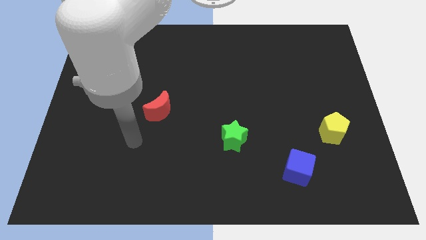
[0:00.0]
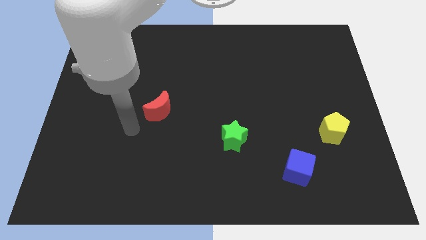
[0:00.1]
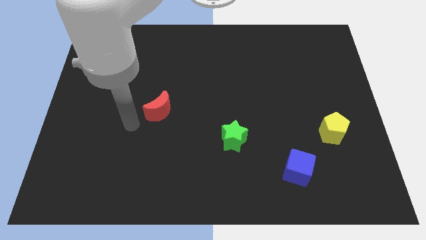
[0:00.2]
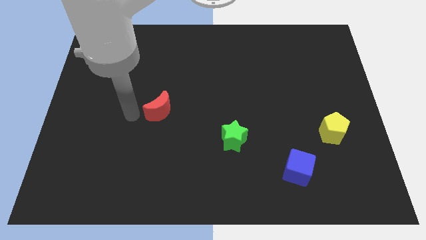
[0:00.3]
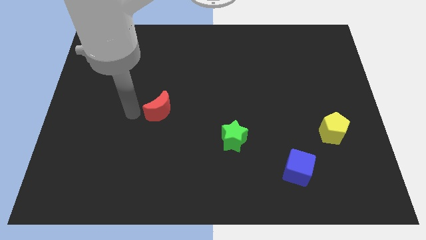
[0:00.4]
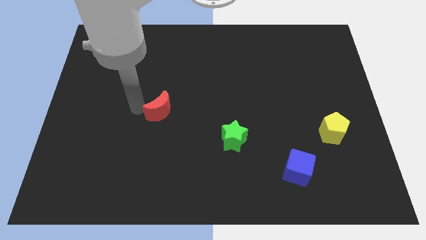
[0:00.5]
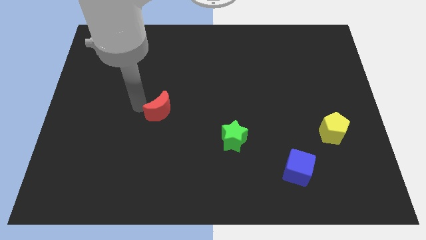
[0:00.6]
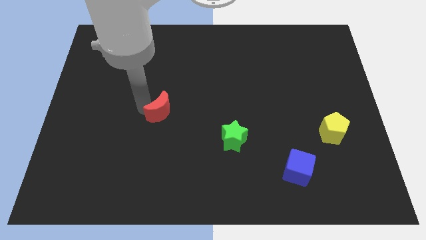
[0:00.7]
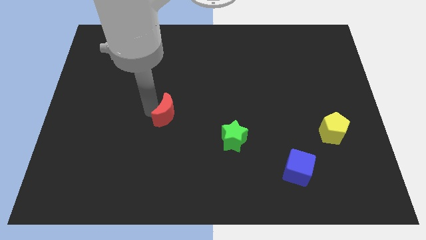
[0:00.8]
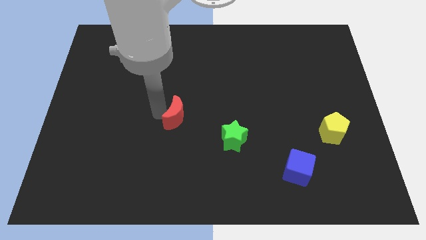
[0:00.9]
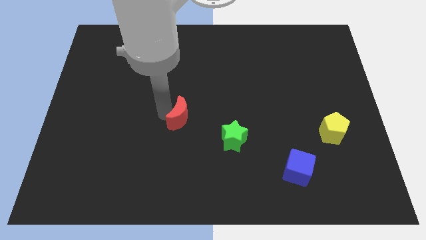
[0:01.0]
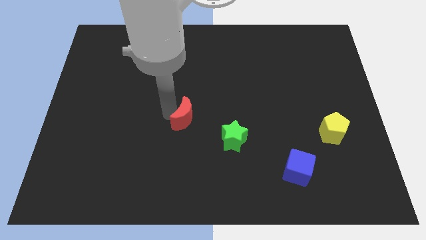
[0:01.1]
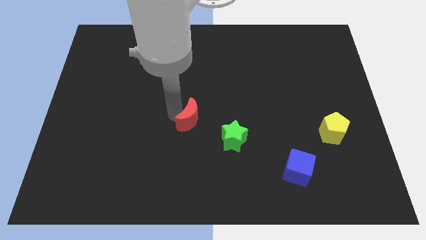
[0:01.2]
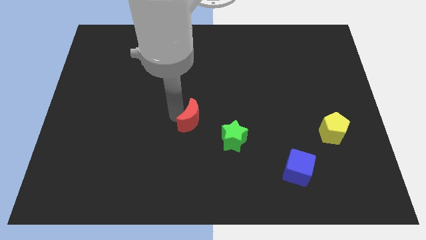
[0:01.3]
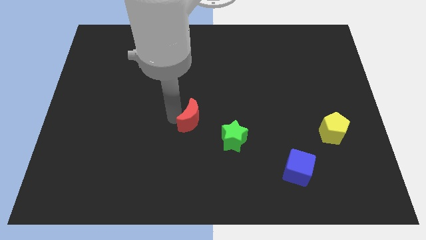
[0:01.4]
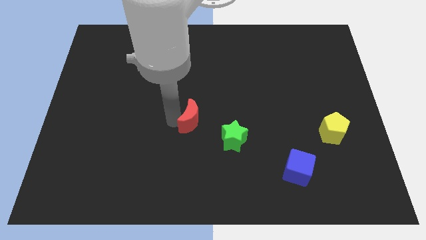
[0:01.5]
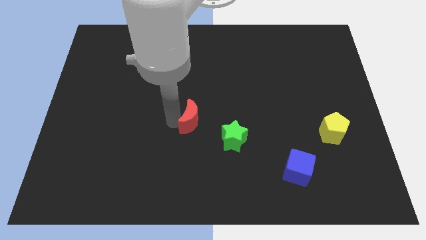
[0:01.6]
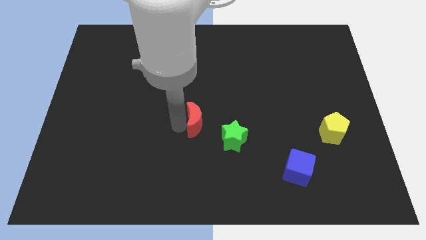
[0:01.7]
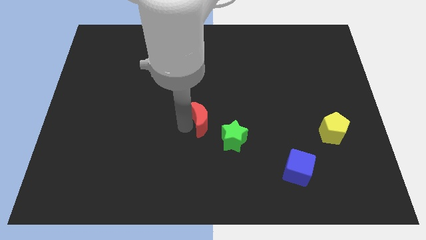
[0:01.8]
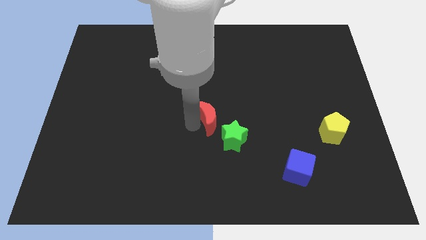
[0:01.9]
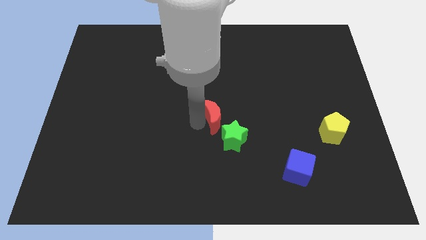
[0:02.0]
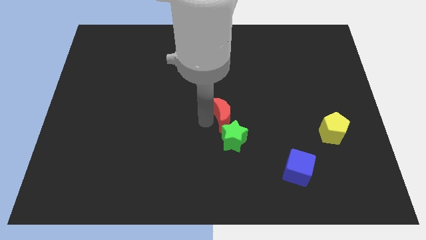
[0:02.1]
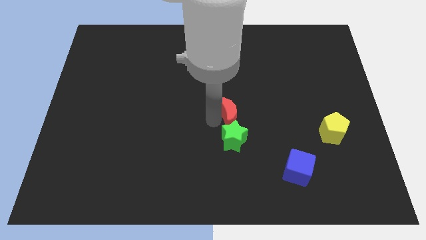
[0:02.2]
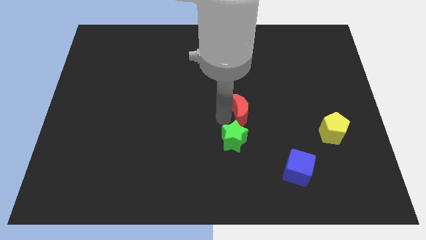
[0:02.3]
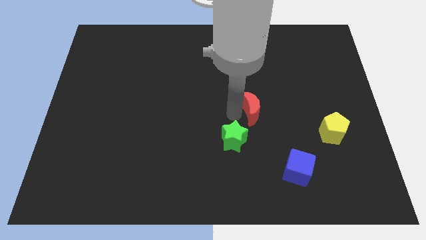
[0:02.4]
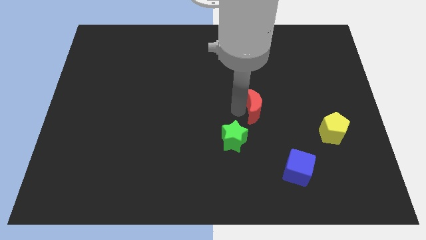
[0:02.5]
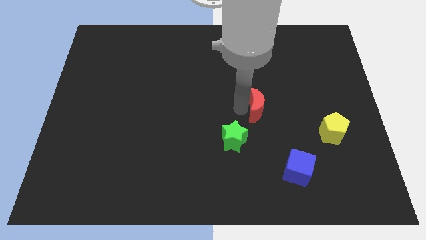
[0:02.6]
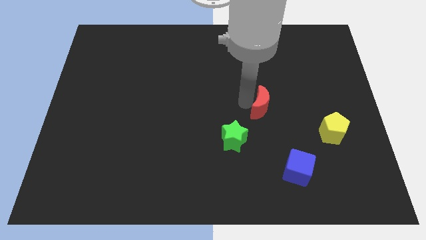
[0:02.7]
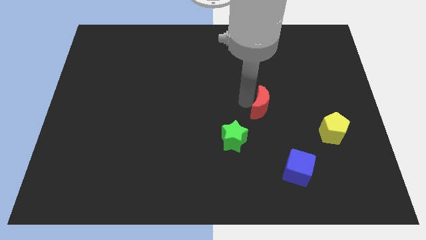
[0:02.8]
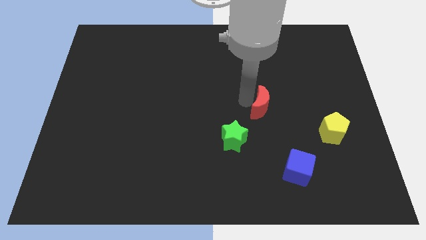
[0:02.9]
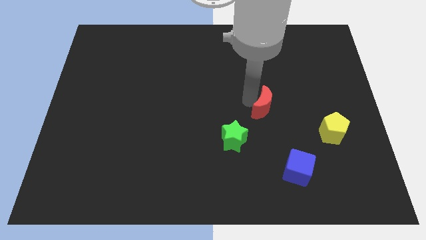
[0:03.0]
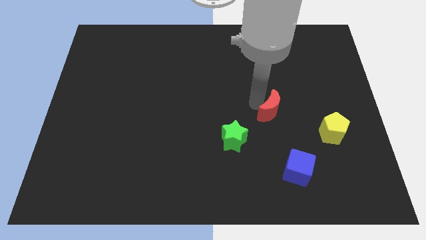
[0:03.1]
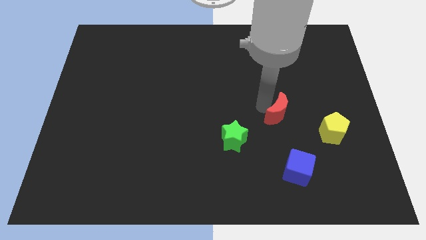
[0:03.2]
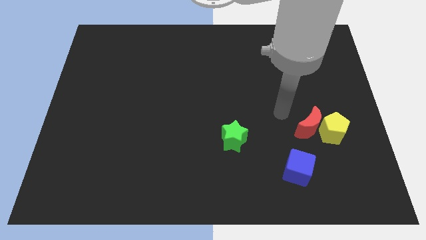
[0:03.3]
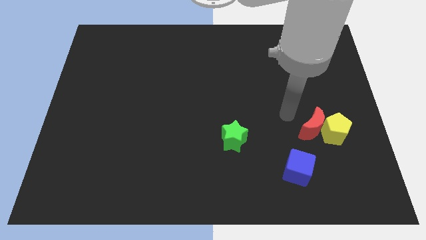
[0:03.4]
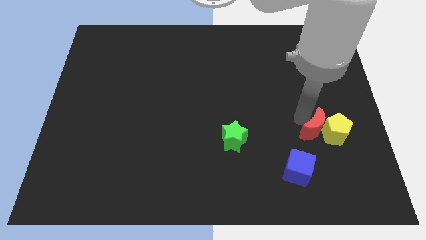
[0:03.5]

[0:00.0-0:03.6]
slide the red block next to the yellow block

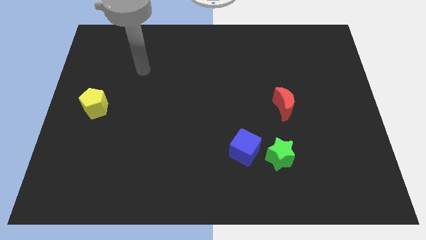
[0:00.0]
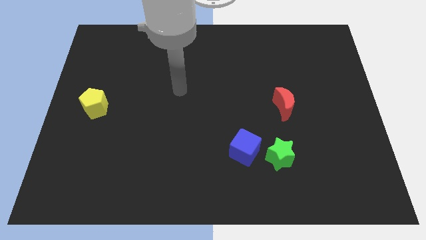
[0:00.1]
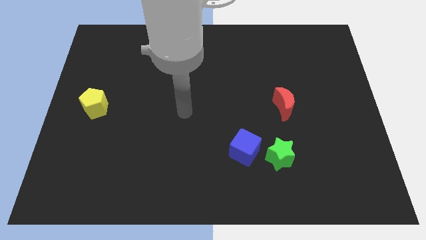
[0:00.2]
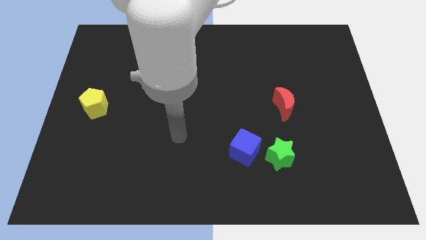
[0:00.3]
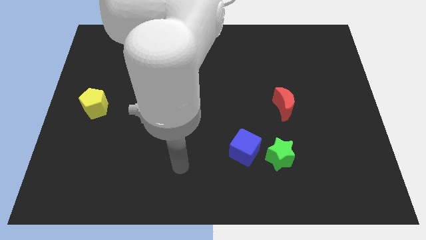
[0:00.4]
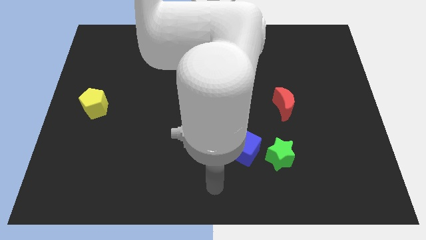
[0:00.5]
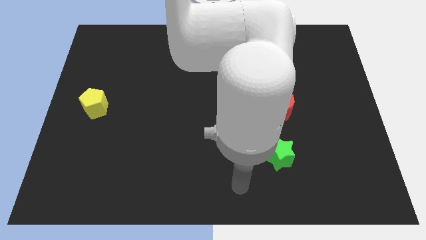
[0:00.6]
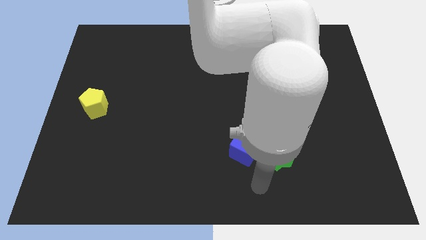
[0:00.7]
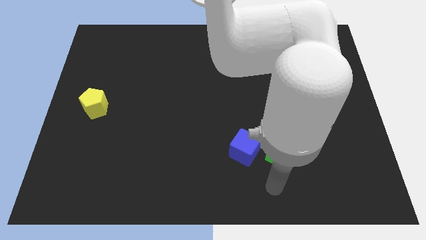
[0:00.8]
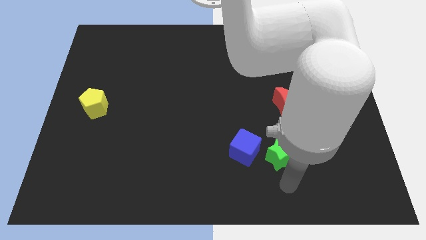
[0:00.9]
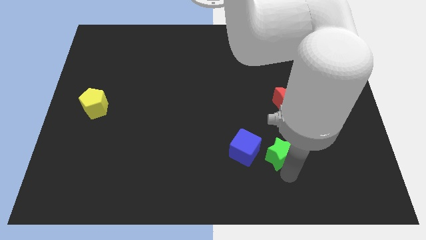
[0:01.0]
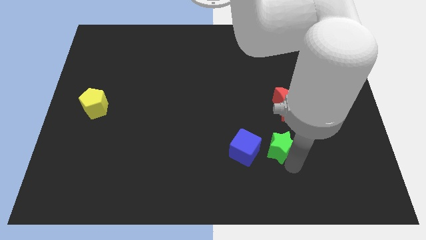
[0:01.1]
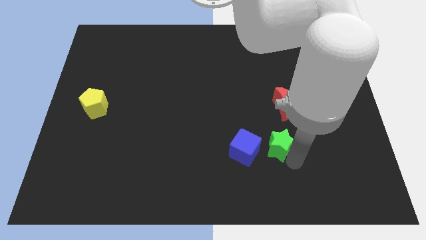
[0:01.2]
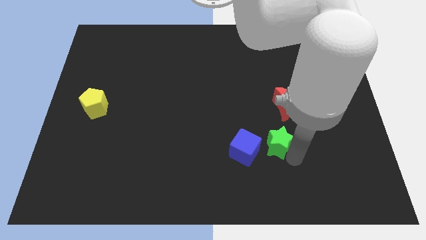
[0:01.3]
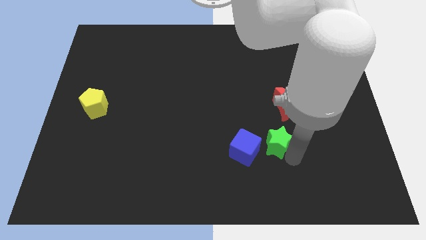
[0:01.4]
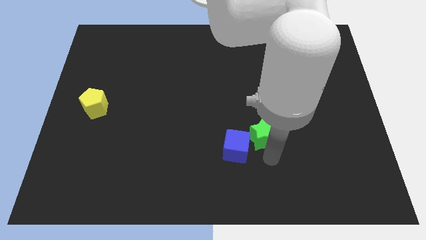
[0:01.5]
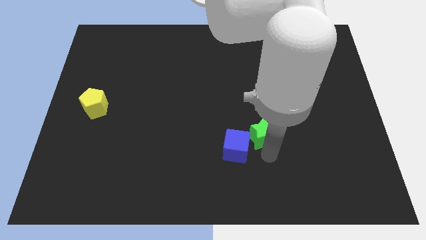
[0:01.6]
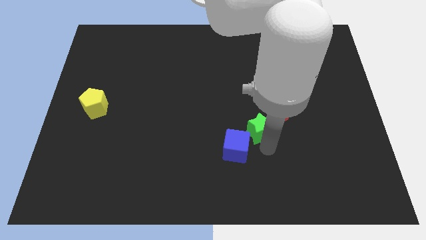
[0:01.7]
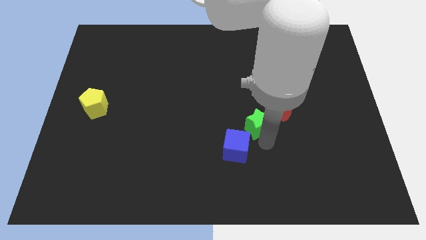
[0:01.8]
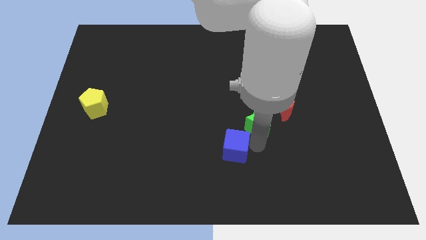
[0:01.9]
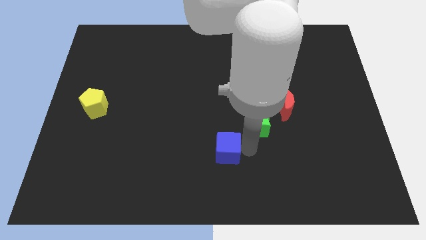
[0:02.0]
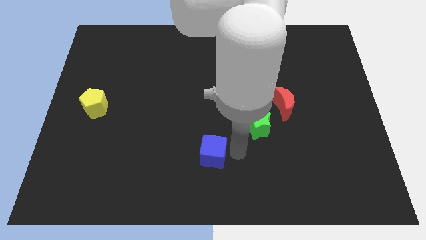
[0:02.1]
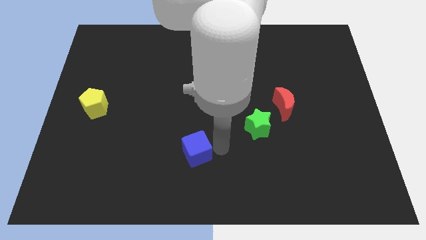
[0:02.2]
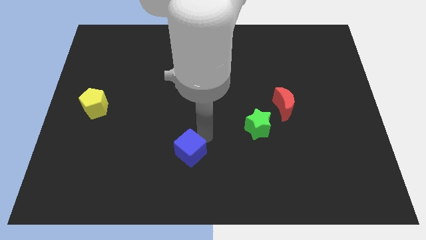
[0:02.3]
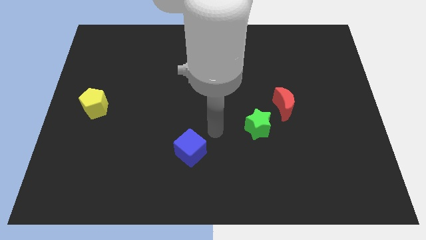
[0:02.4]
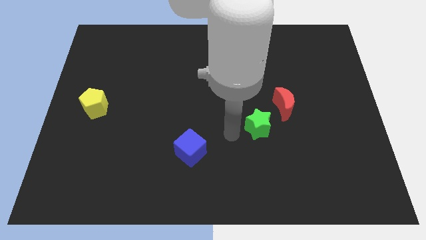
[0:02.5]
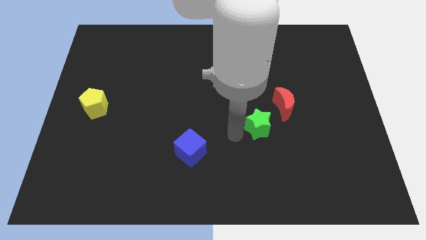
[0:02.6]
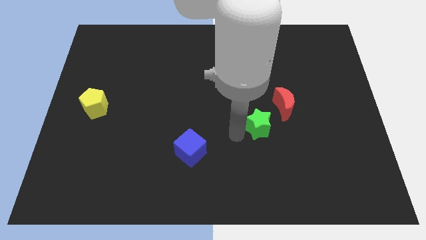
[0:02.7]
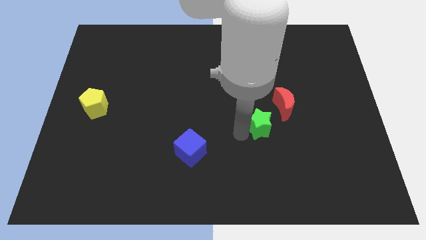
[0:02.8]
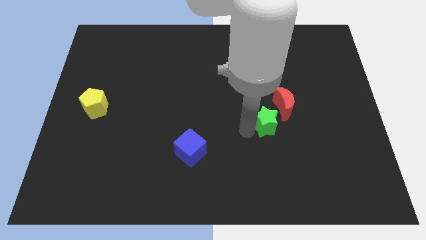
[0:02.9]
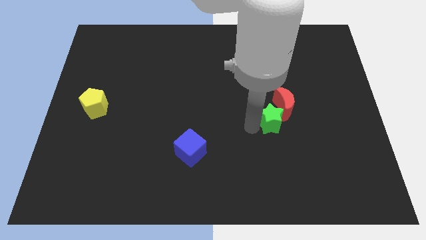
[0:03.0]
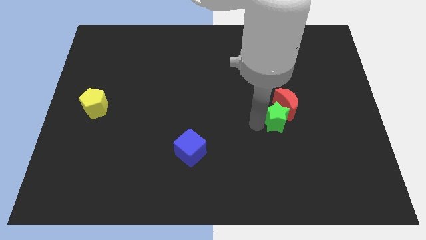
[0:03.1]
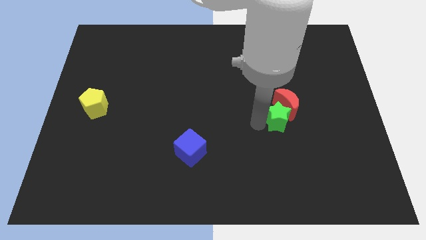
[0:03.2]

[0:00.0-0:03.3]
put the star next to the red block

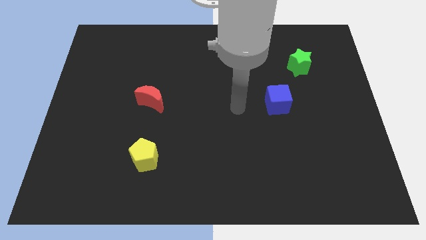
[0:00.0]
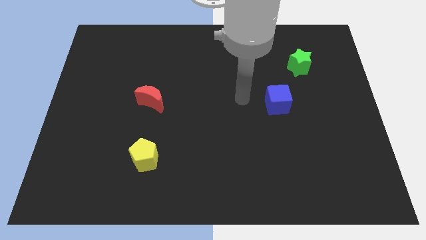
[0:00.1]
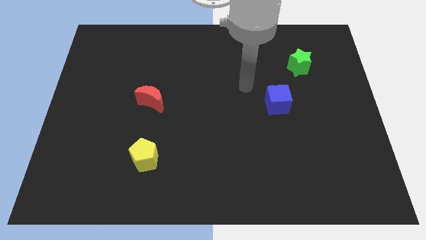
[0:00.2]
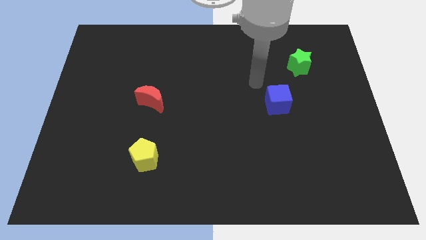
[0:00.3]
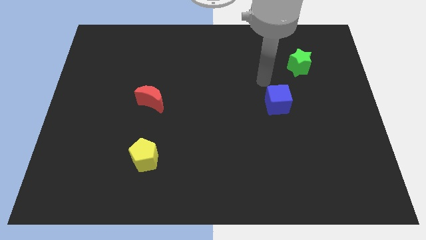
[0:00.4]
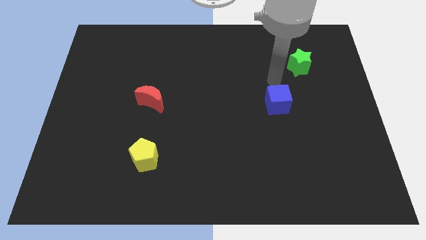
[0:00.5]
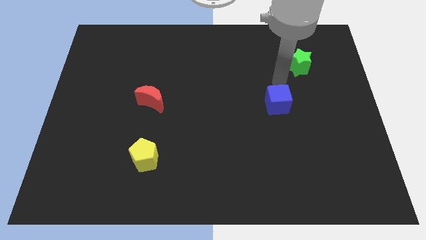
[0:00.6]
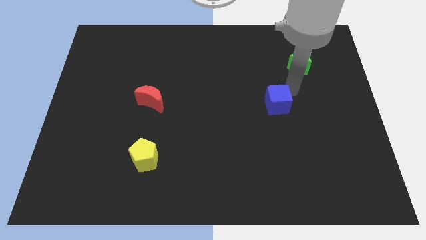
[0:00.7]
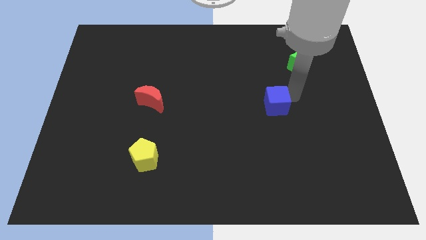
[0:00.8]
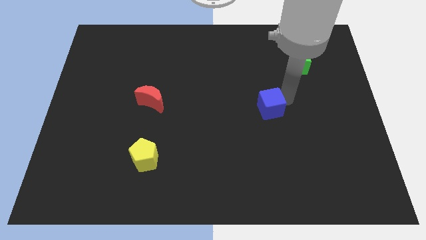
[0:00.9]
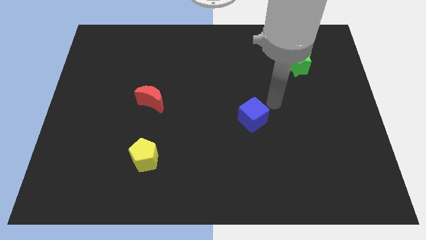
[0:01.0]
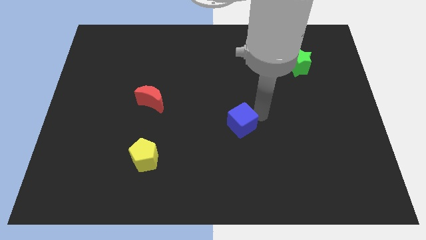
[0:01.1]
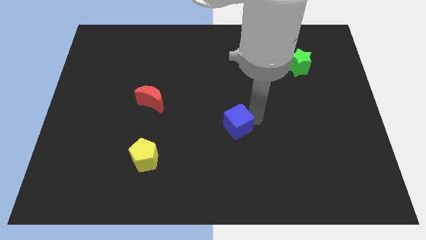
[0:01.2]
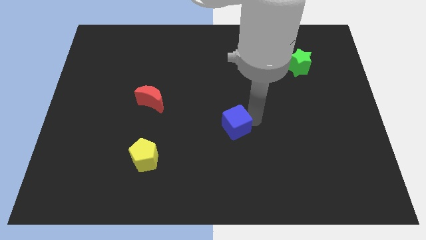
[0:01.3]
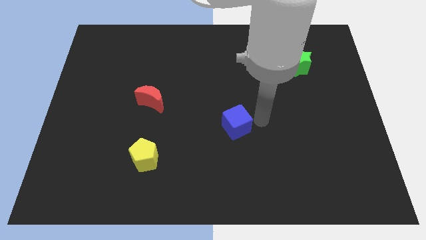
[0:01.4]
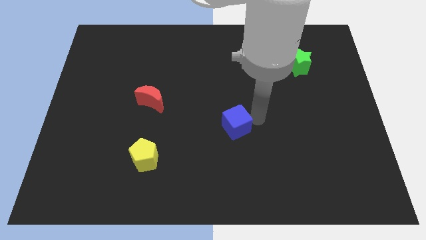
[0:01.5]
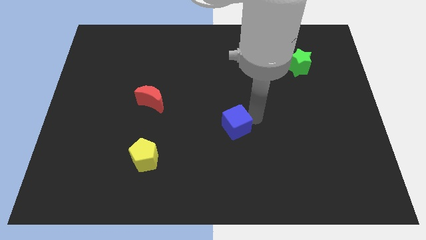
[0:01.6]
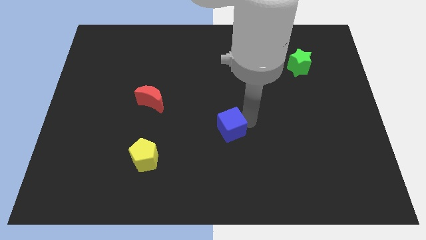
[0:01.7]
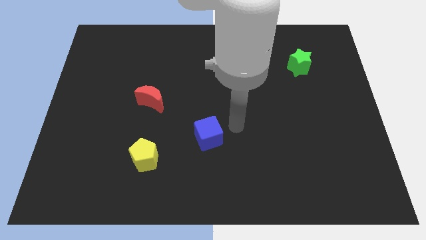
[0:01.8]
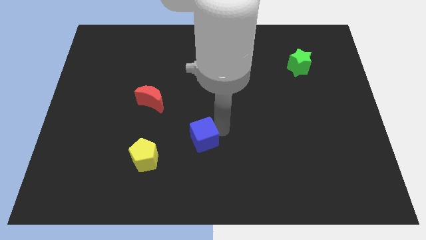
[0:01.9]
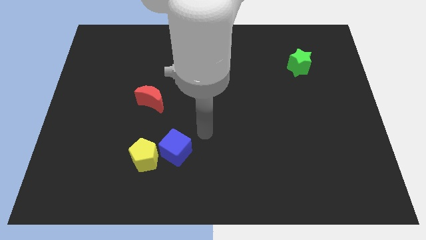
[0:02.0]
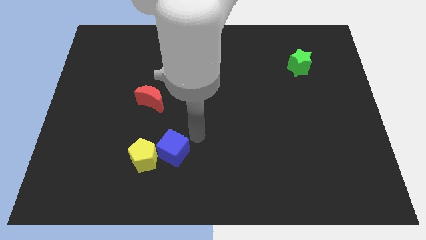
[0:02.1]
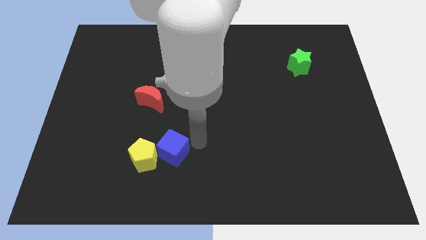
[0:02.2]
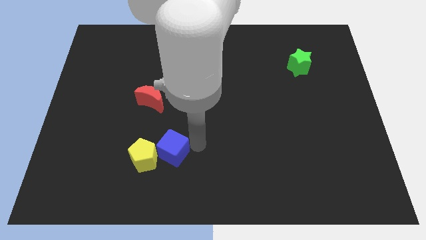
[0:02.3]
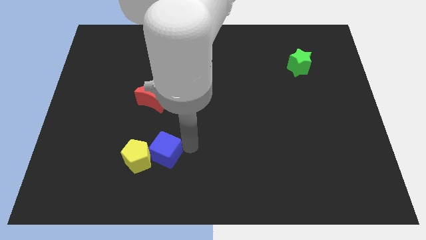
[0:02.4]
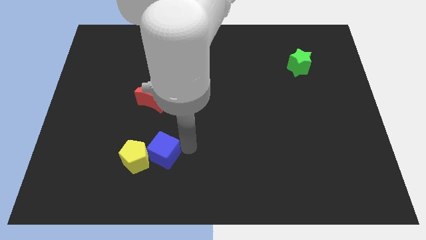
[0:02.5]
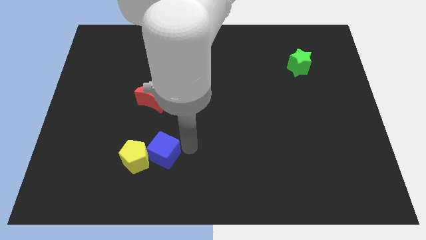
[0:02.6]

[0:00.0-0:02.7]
slide the blue cube close to the yellow block
